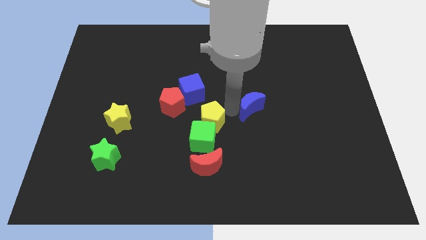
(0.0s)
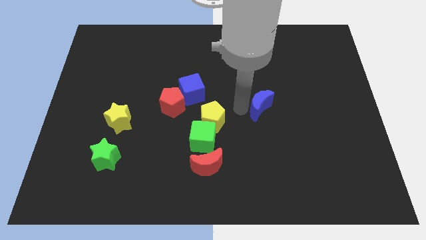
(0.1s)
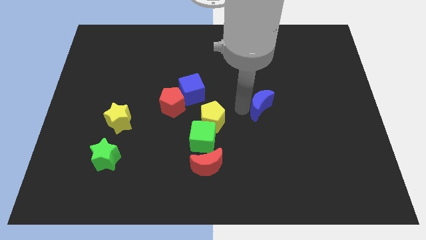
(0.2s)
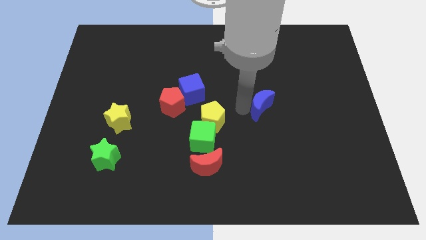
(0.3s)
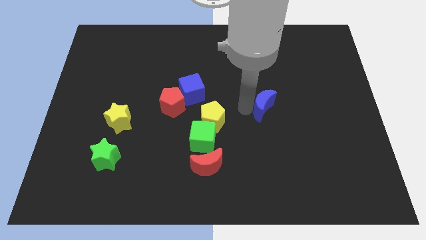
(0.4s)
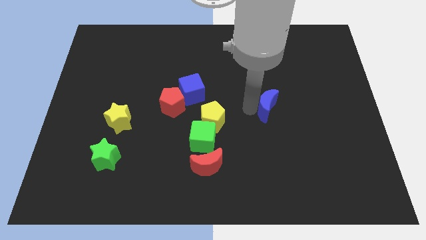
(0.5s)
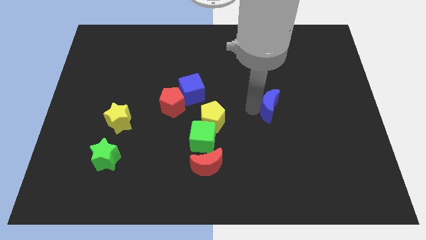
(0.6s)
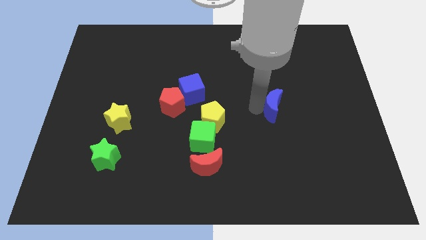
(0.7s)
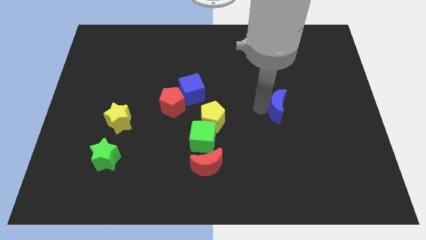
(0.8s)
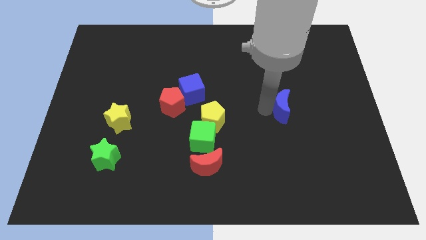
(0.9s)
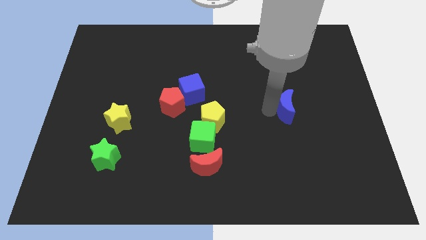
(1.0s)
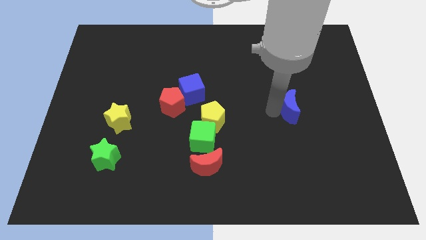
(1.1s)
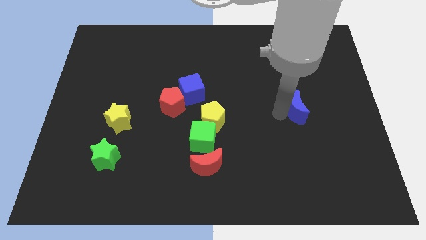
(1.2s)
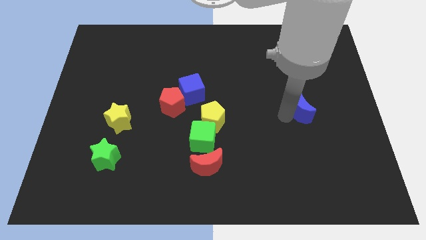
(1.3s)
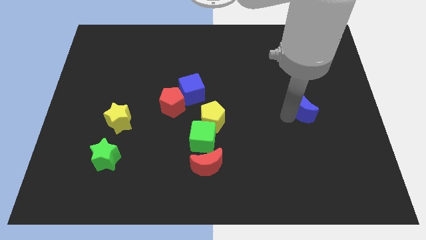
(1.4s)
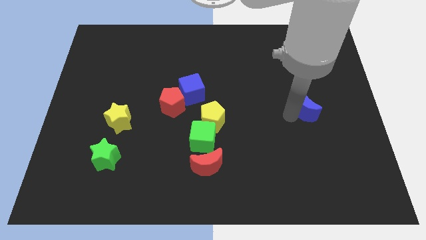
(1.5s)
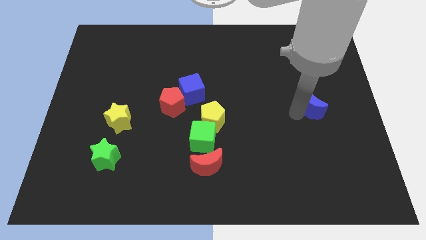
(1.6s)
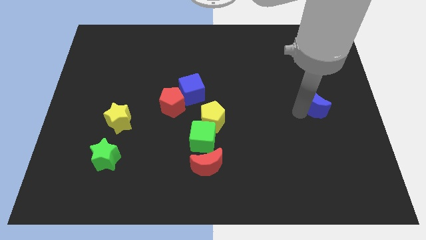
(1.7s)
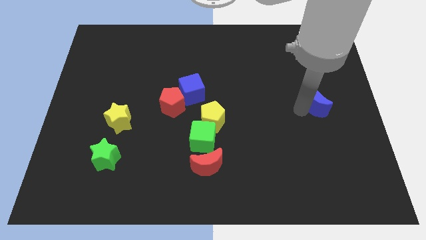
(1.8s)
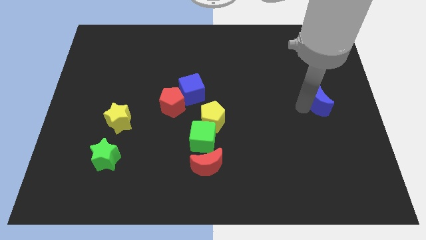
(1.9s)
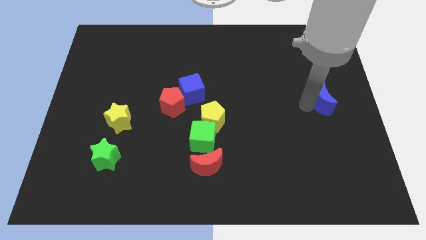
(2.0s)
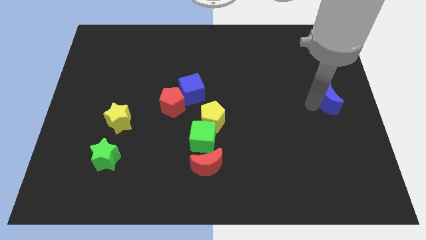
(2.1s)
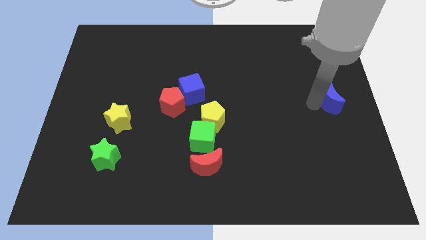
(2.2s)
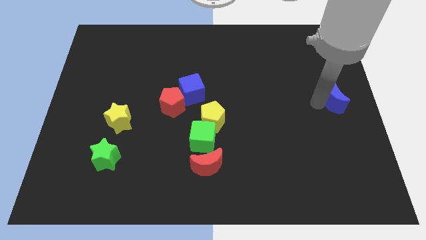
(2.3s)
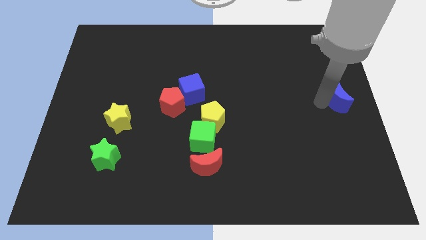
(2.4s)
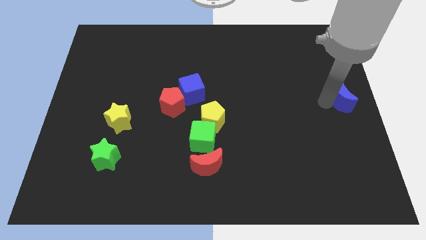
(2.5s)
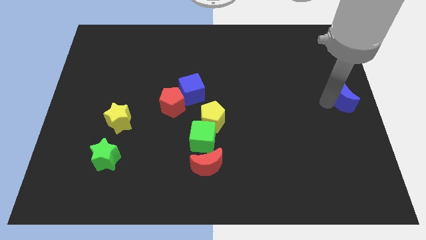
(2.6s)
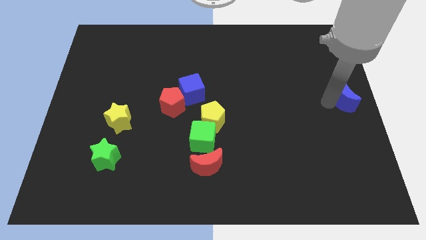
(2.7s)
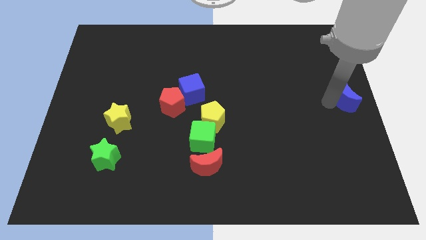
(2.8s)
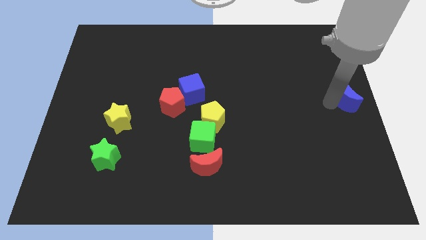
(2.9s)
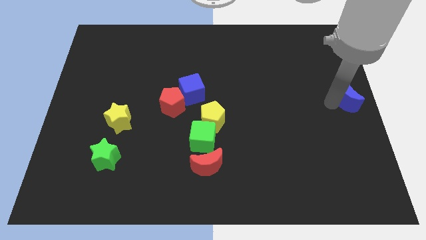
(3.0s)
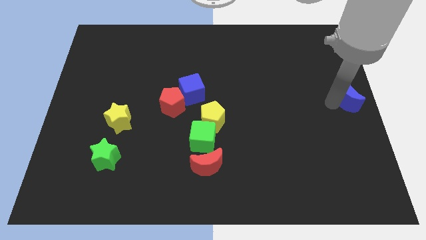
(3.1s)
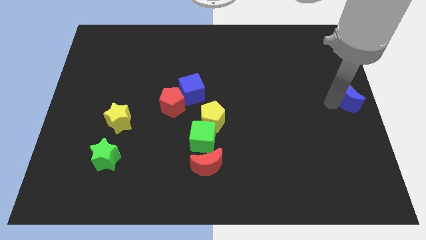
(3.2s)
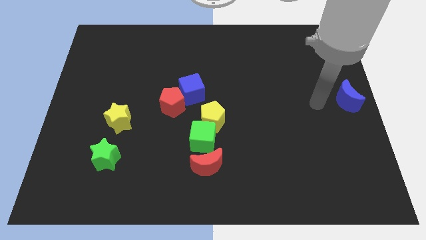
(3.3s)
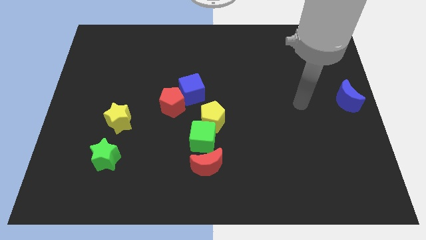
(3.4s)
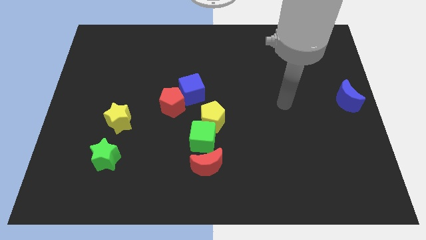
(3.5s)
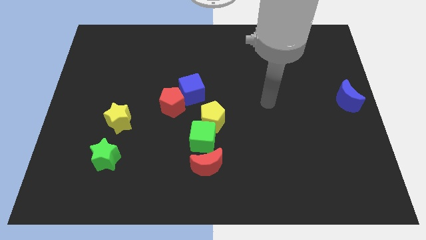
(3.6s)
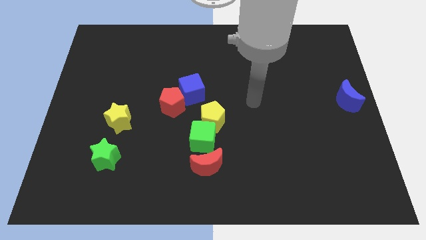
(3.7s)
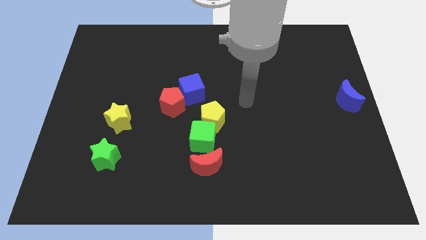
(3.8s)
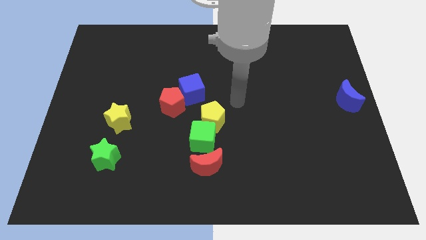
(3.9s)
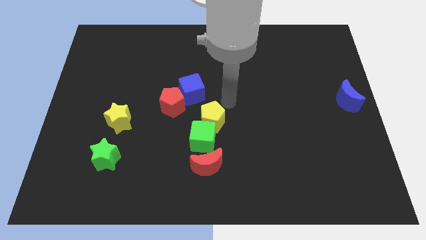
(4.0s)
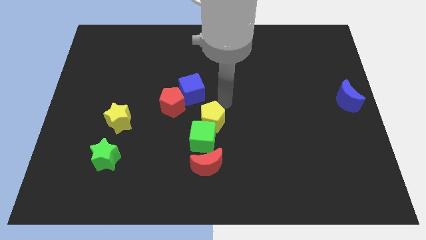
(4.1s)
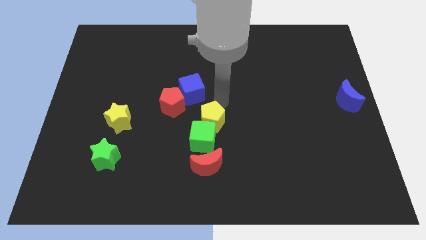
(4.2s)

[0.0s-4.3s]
push the blue moon to the right side of the board

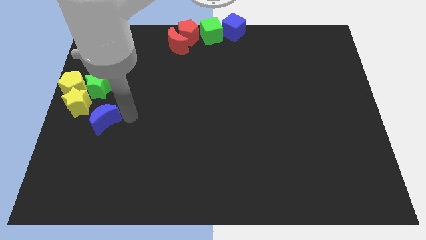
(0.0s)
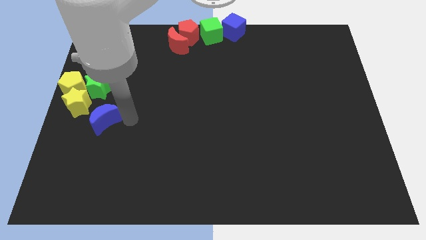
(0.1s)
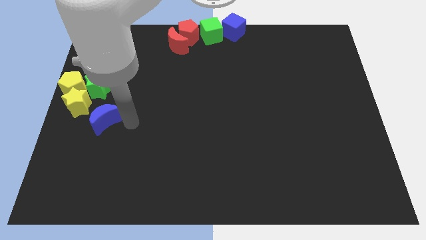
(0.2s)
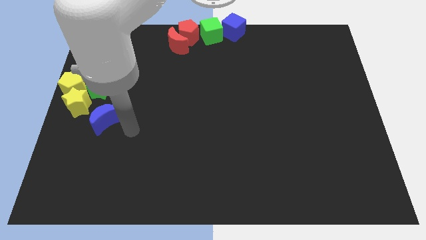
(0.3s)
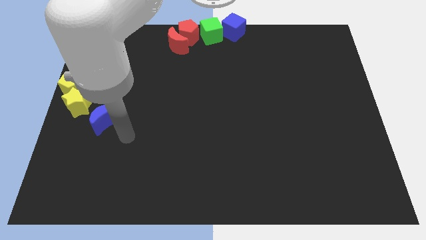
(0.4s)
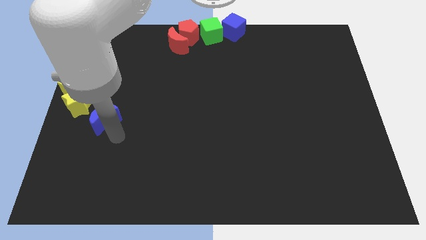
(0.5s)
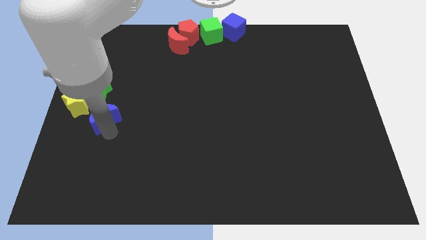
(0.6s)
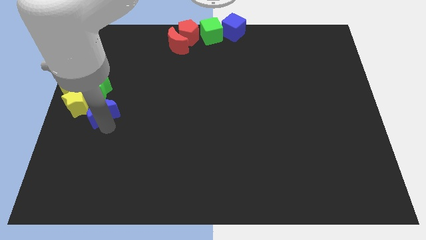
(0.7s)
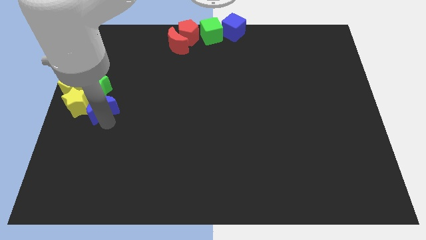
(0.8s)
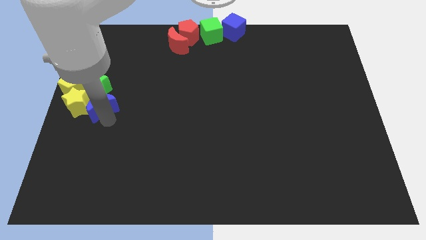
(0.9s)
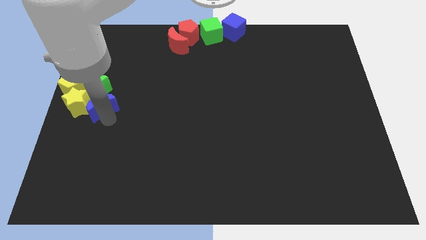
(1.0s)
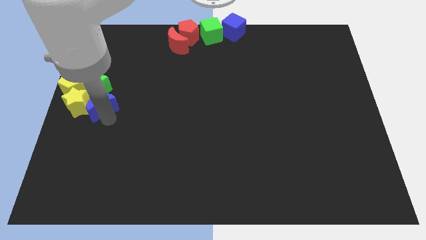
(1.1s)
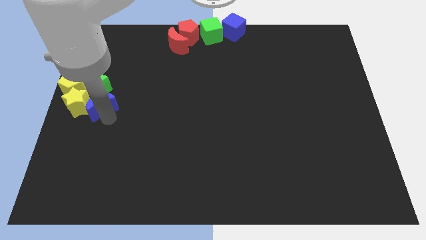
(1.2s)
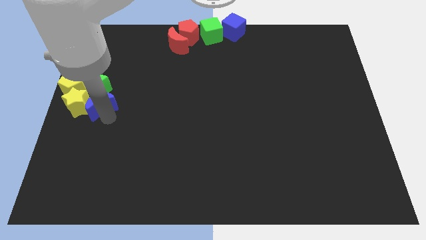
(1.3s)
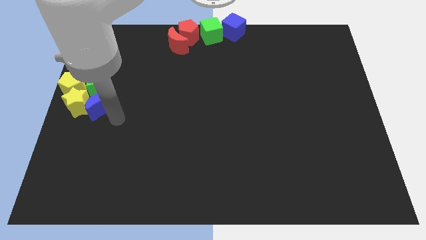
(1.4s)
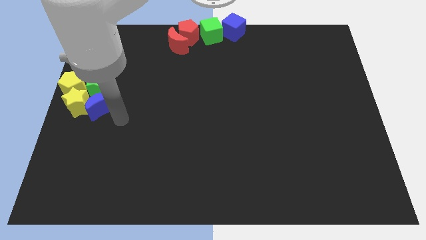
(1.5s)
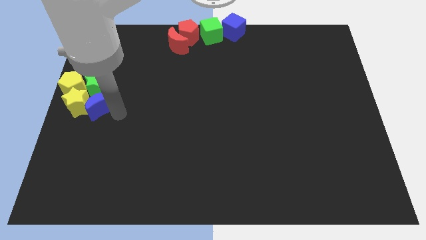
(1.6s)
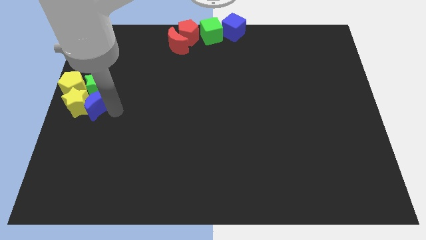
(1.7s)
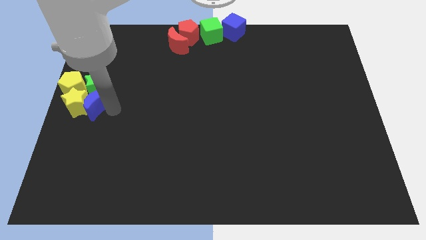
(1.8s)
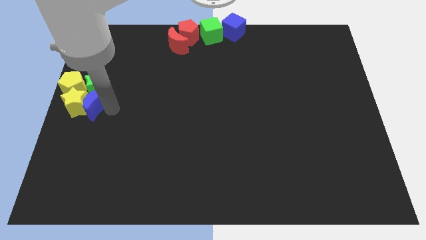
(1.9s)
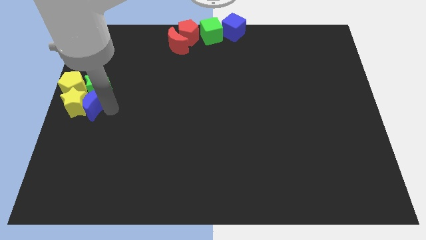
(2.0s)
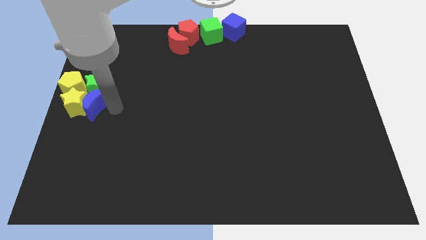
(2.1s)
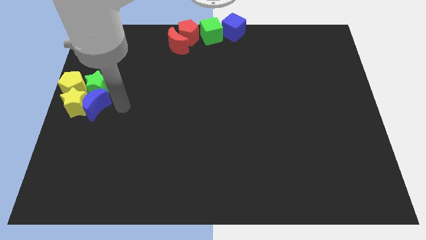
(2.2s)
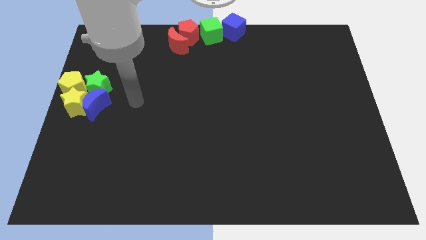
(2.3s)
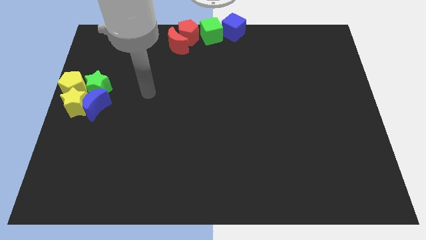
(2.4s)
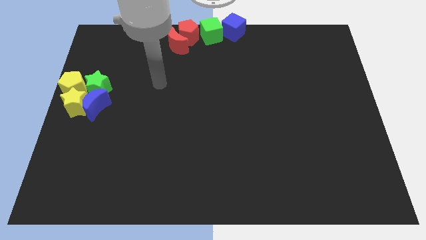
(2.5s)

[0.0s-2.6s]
place the blue crescent below green star

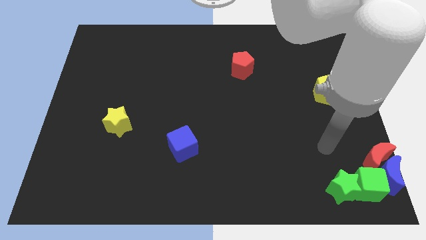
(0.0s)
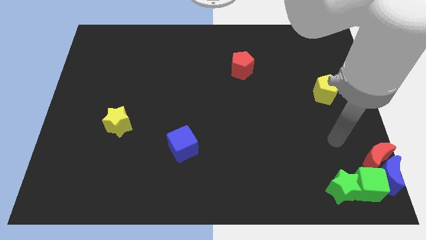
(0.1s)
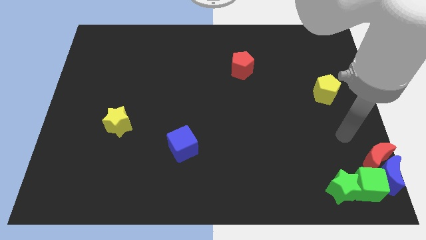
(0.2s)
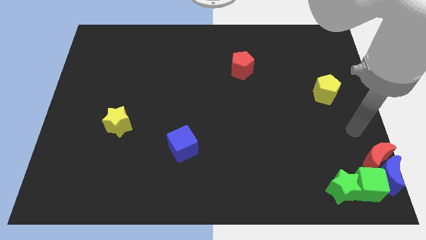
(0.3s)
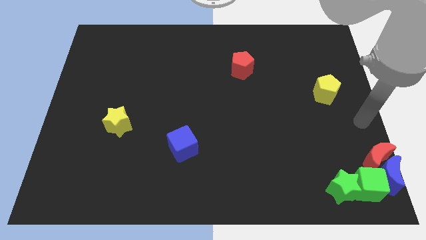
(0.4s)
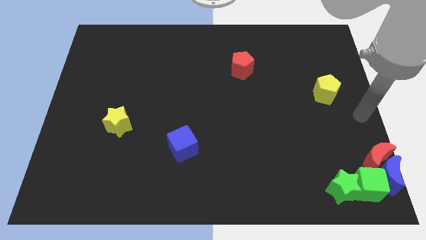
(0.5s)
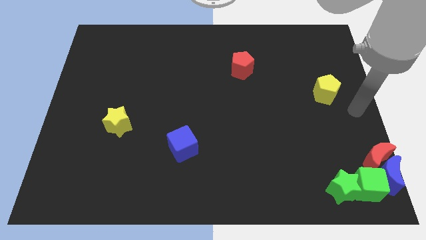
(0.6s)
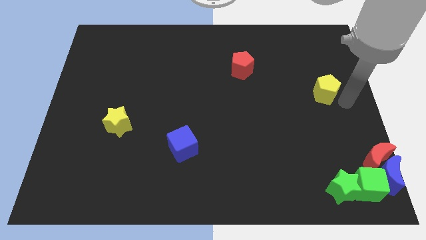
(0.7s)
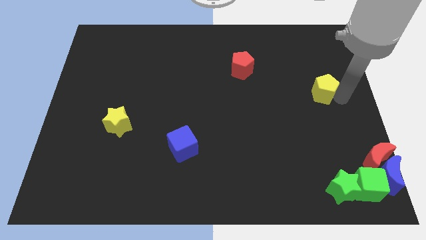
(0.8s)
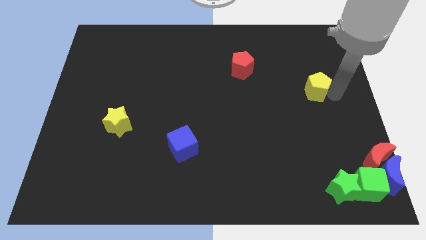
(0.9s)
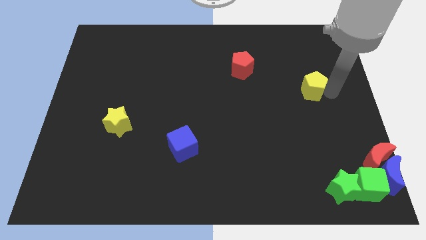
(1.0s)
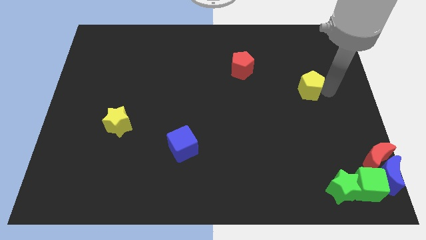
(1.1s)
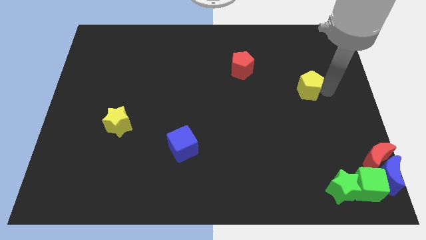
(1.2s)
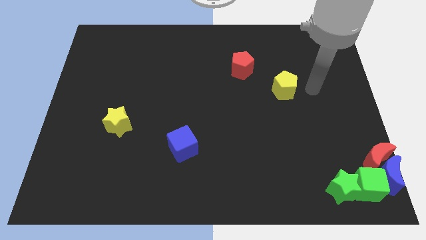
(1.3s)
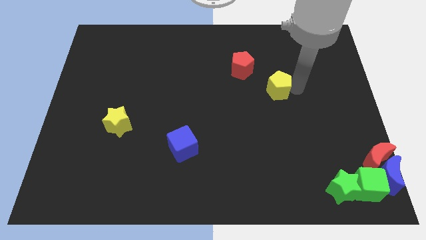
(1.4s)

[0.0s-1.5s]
move the yellow pentagon slightly to the left

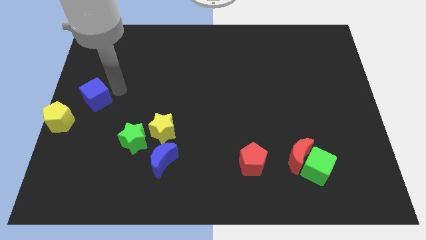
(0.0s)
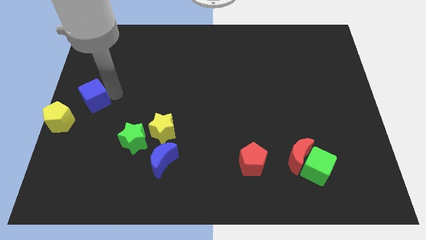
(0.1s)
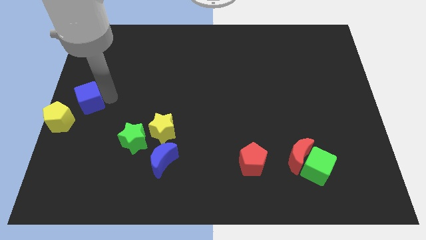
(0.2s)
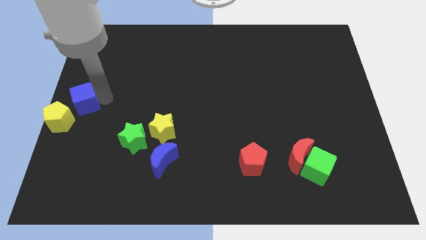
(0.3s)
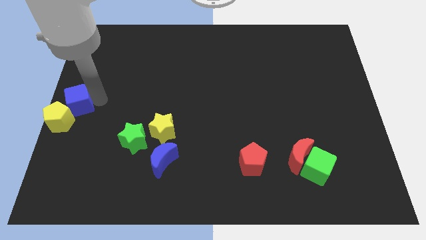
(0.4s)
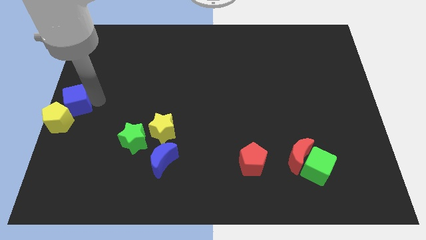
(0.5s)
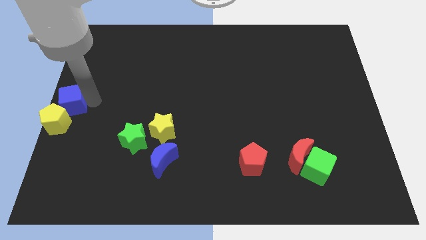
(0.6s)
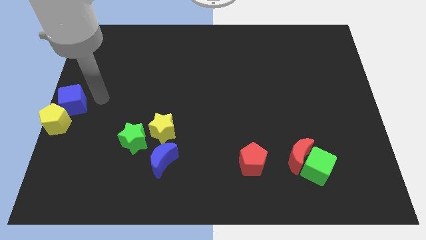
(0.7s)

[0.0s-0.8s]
move the blue cube close to the yellow pentagon
